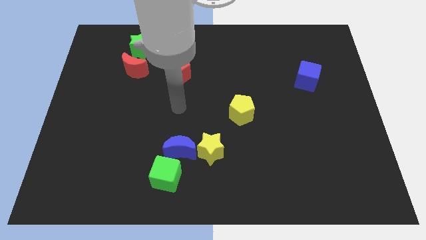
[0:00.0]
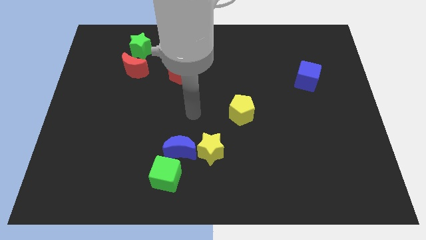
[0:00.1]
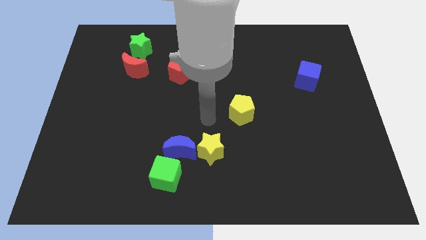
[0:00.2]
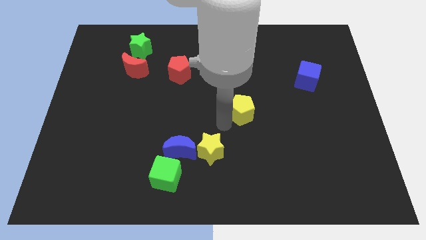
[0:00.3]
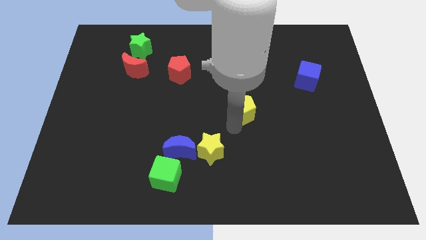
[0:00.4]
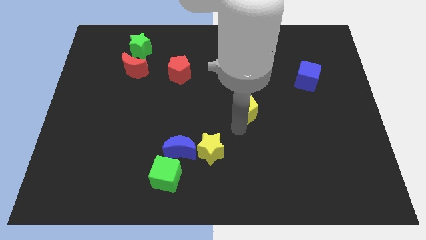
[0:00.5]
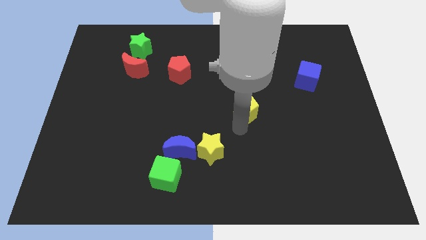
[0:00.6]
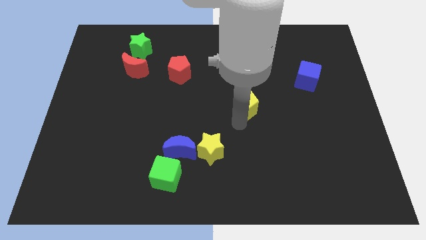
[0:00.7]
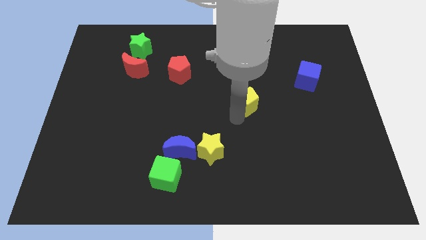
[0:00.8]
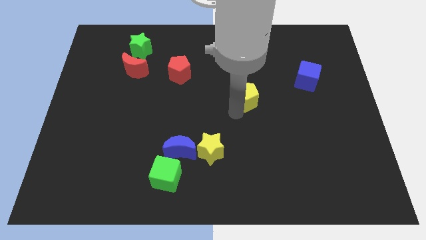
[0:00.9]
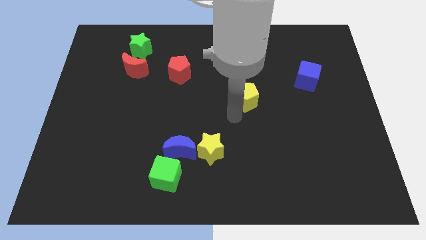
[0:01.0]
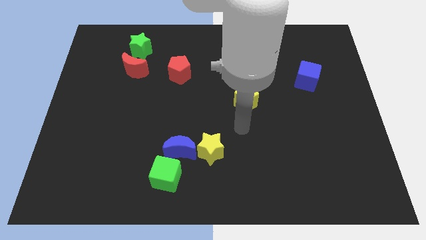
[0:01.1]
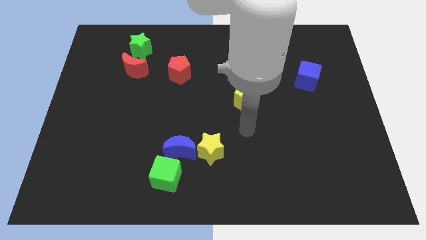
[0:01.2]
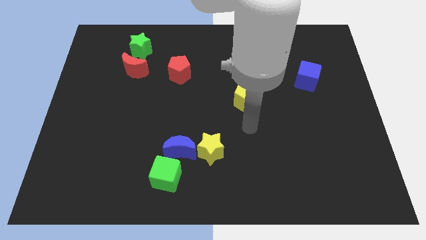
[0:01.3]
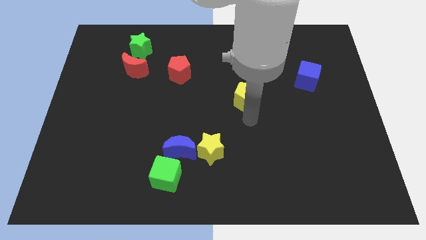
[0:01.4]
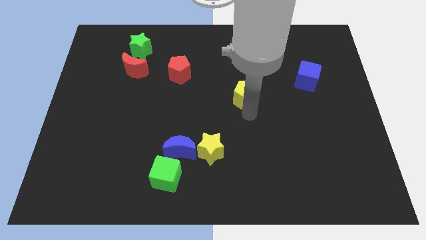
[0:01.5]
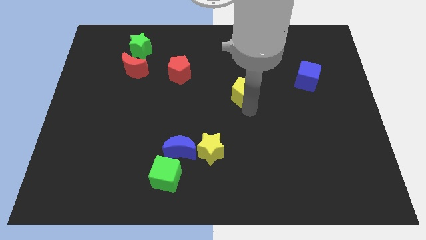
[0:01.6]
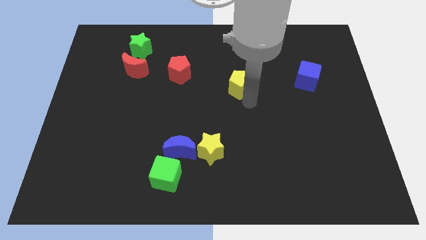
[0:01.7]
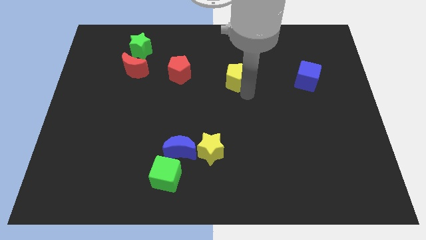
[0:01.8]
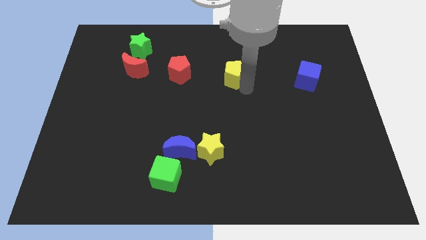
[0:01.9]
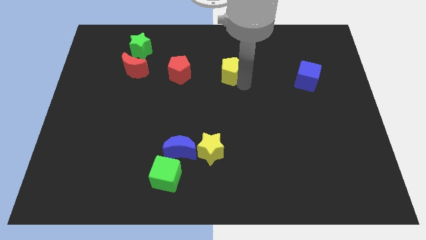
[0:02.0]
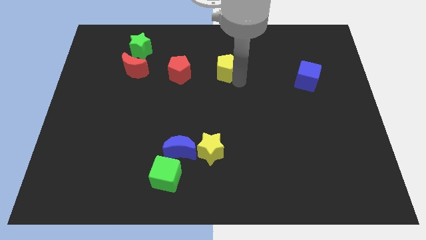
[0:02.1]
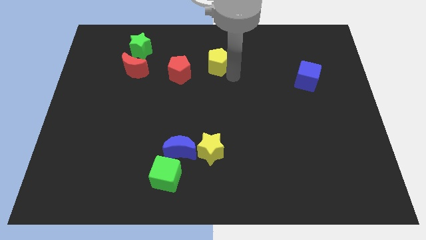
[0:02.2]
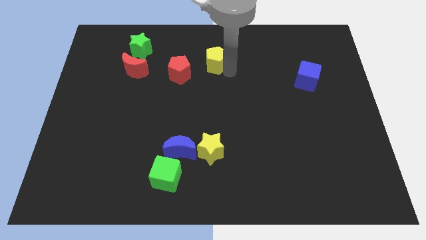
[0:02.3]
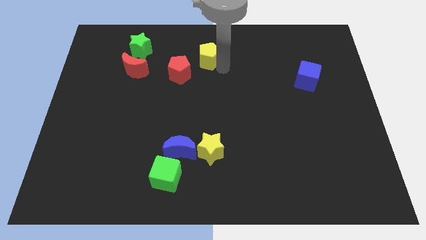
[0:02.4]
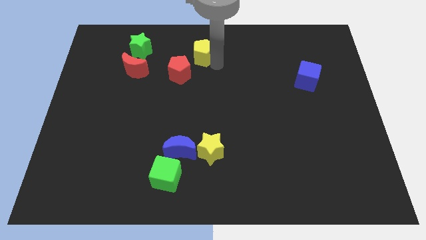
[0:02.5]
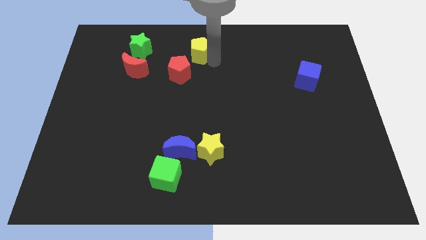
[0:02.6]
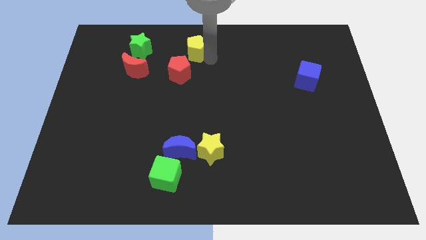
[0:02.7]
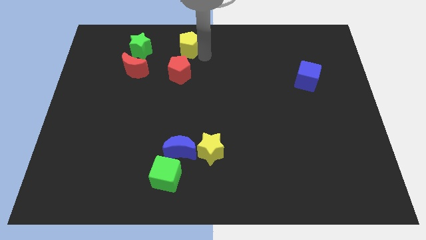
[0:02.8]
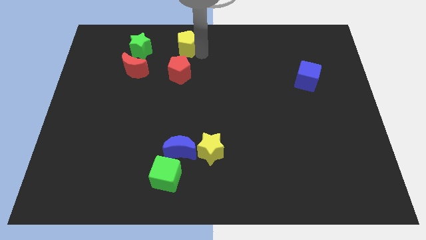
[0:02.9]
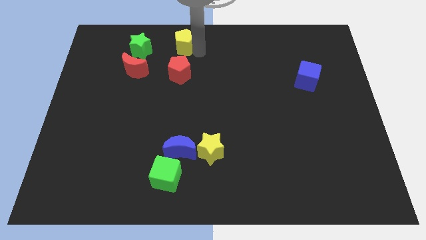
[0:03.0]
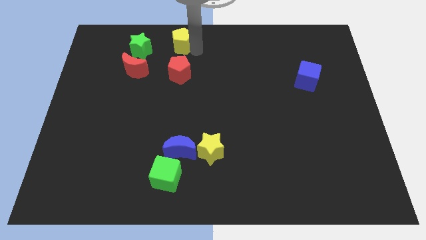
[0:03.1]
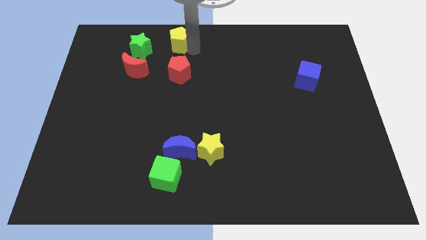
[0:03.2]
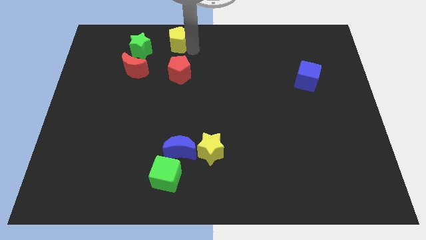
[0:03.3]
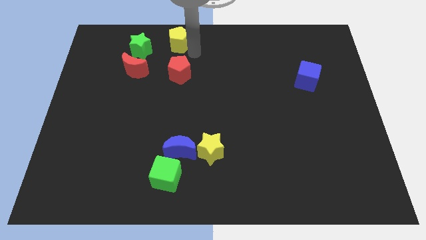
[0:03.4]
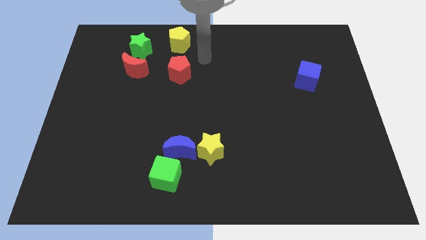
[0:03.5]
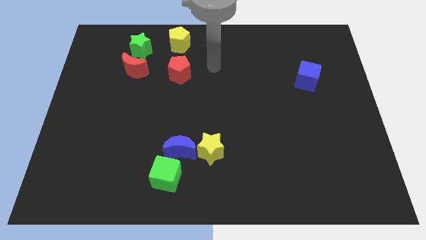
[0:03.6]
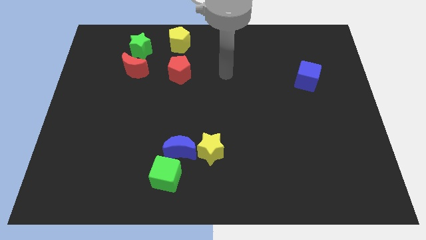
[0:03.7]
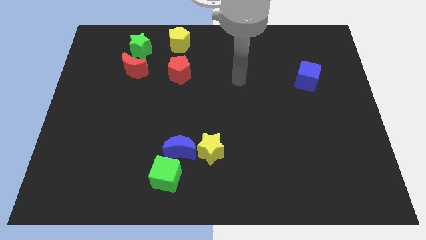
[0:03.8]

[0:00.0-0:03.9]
place the yellow pentagon on top of the red pentagon

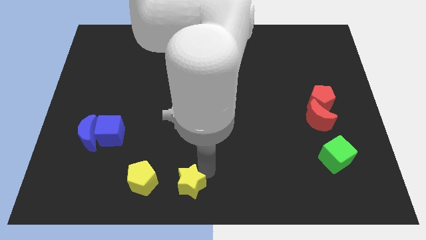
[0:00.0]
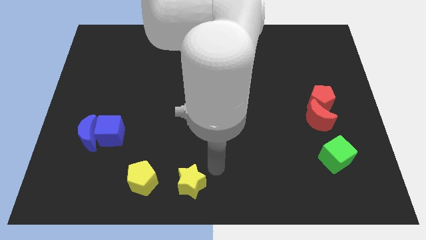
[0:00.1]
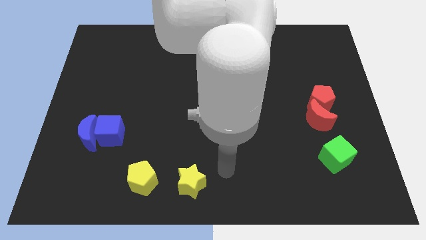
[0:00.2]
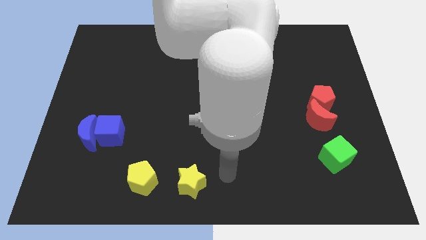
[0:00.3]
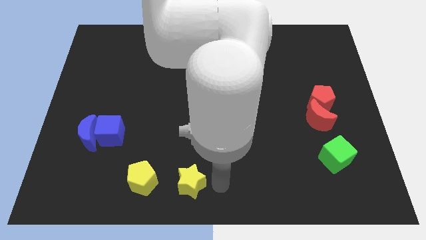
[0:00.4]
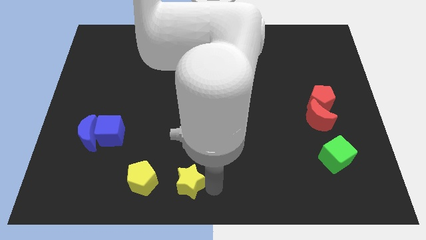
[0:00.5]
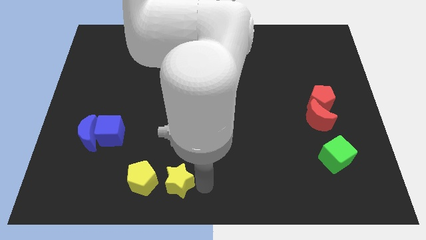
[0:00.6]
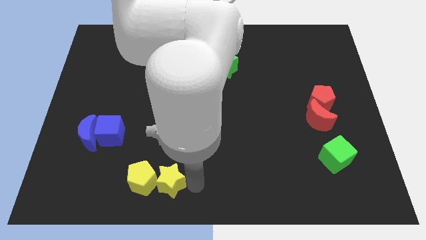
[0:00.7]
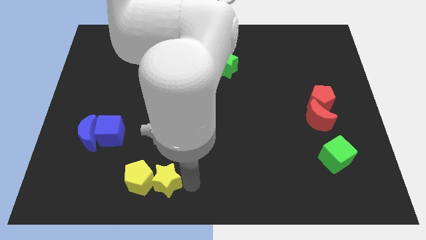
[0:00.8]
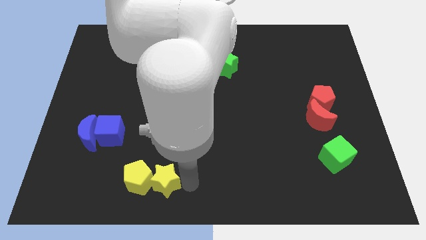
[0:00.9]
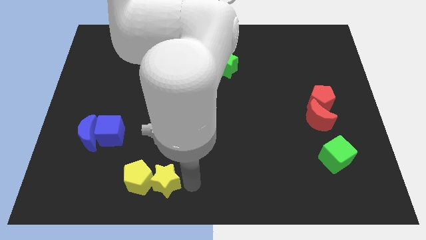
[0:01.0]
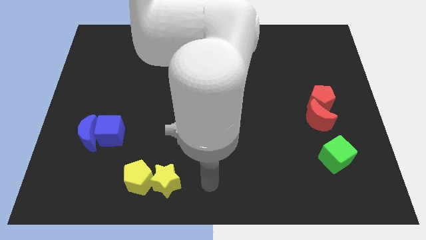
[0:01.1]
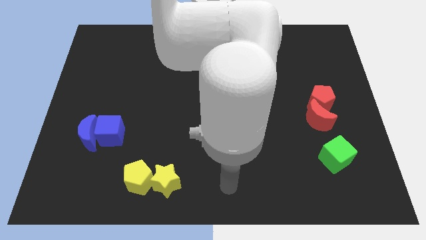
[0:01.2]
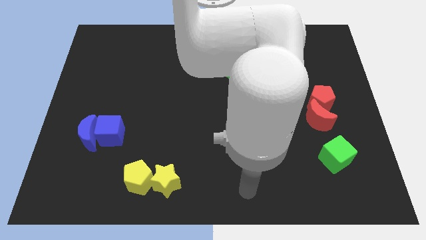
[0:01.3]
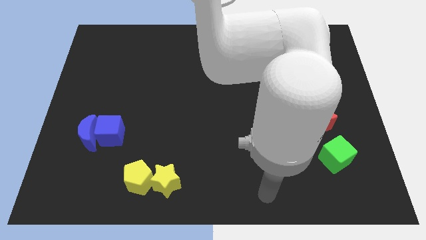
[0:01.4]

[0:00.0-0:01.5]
push the yellow star into the yellow pentagon

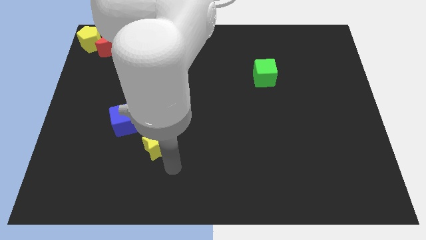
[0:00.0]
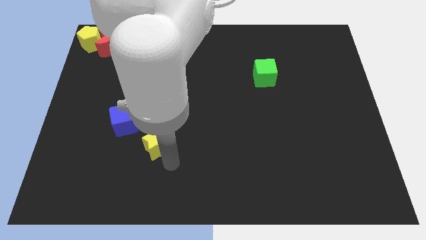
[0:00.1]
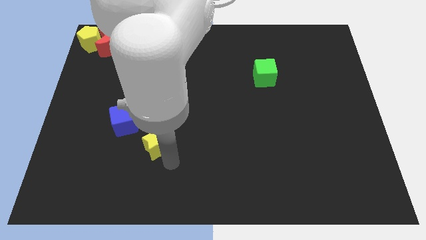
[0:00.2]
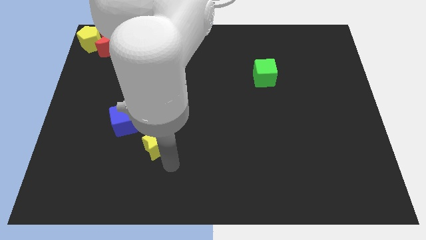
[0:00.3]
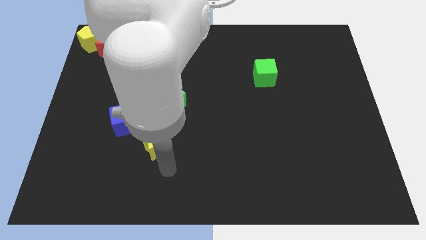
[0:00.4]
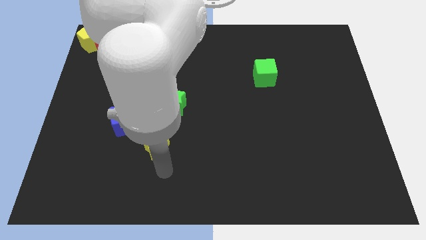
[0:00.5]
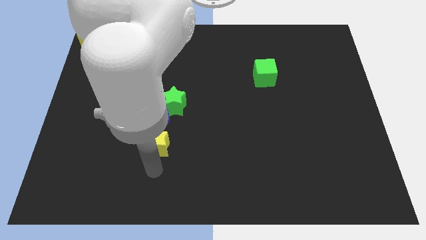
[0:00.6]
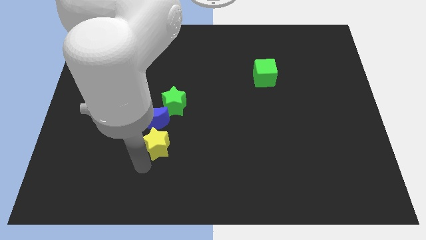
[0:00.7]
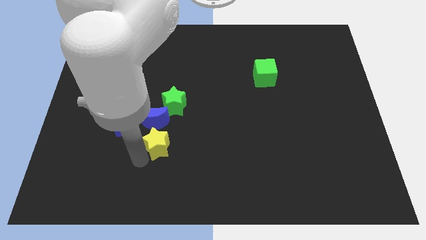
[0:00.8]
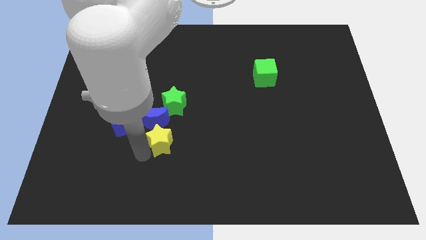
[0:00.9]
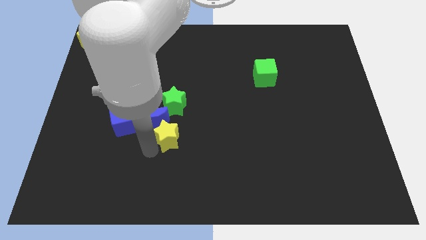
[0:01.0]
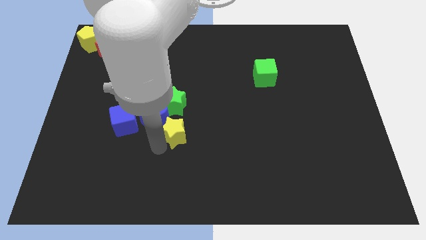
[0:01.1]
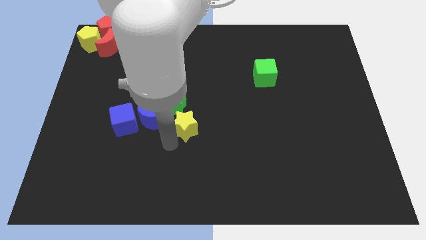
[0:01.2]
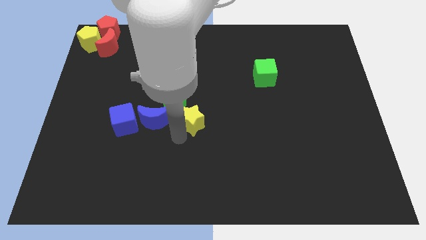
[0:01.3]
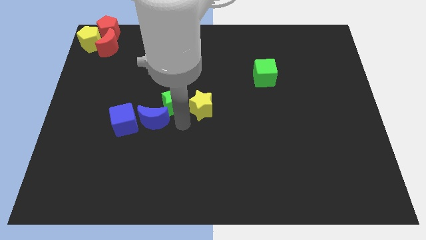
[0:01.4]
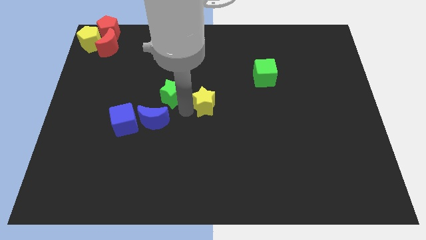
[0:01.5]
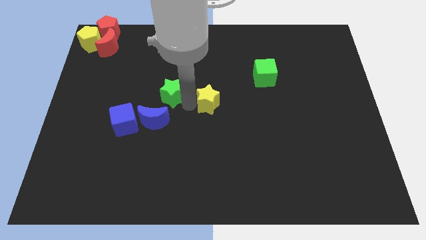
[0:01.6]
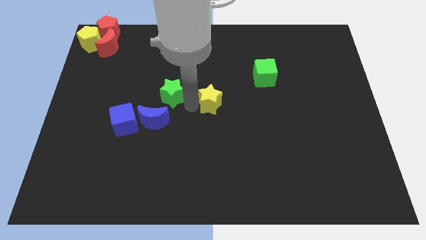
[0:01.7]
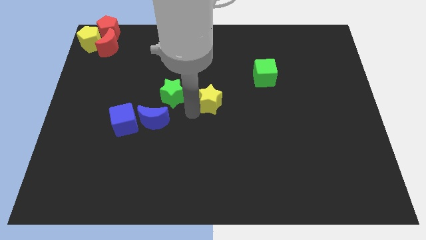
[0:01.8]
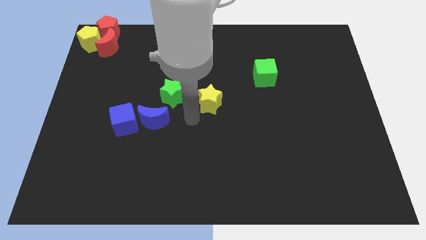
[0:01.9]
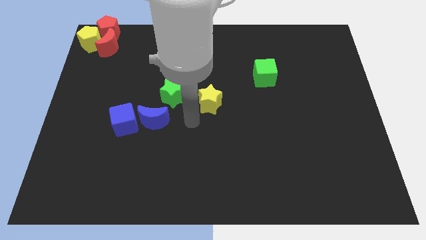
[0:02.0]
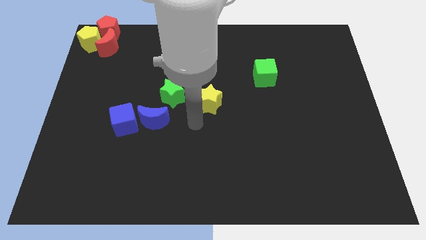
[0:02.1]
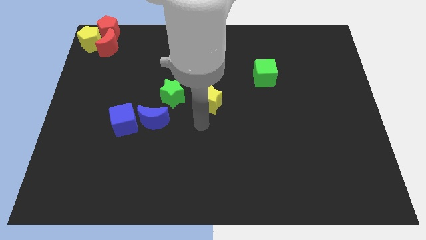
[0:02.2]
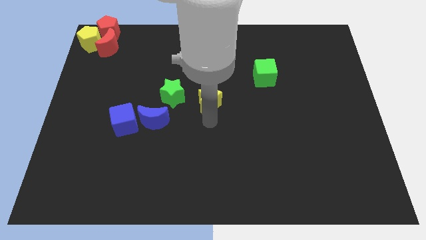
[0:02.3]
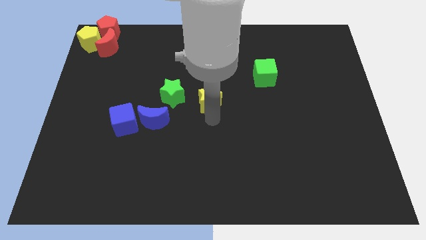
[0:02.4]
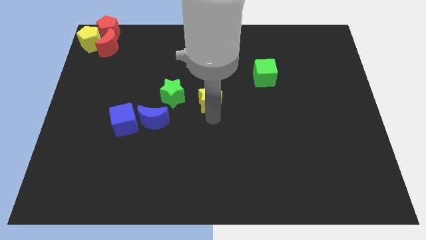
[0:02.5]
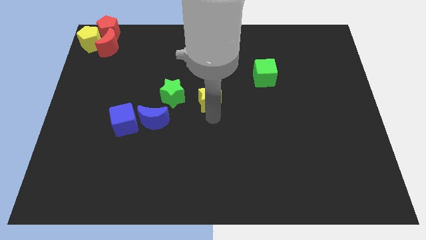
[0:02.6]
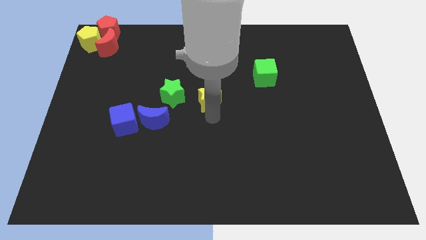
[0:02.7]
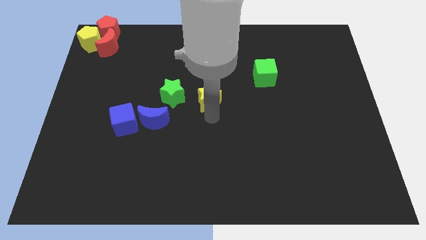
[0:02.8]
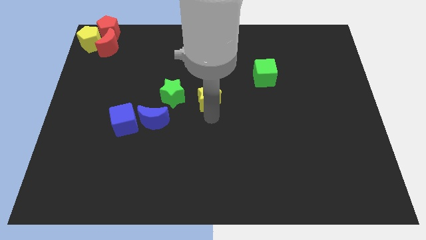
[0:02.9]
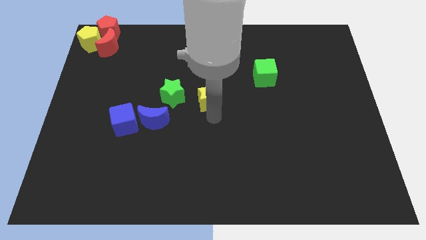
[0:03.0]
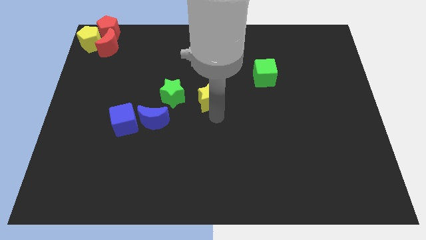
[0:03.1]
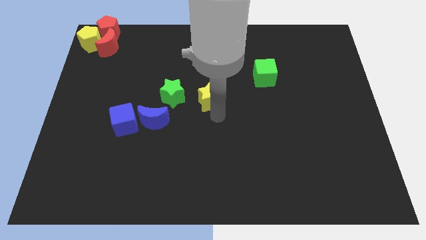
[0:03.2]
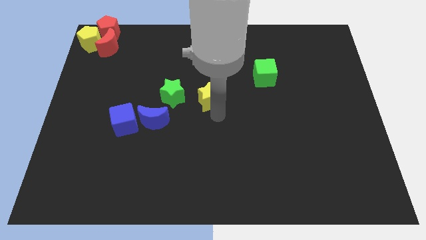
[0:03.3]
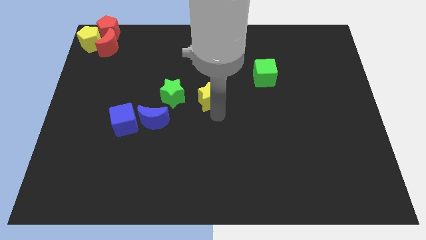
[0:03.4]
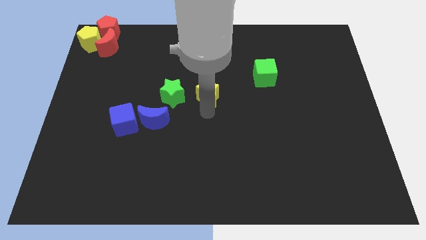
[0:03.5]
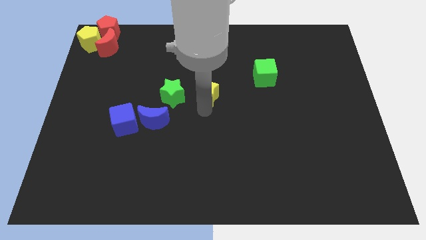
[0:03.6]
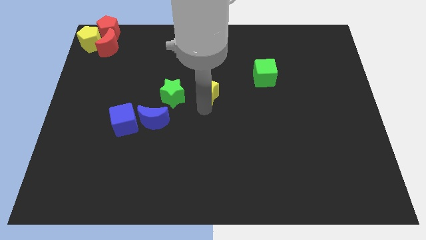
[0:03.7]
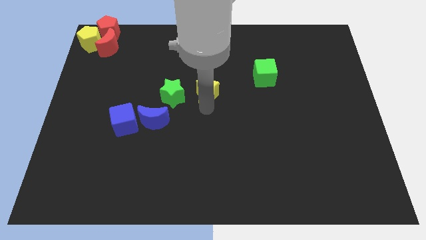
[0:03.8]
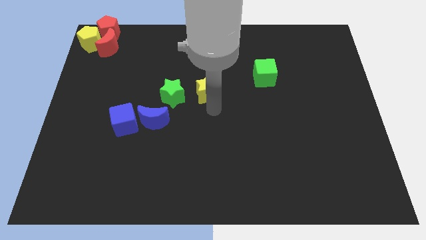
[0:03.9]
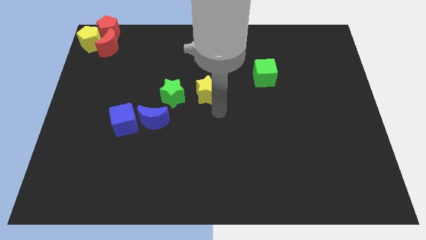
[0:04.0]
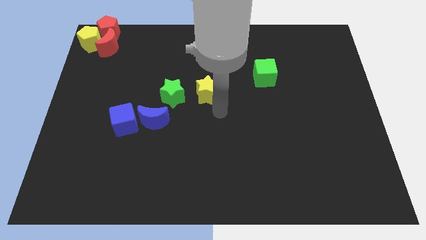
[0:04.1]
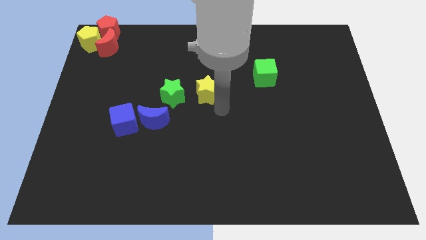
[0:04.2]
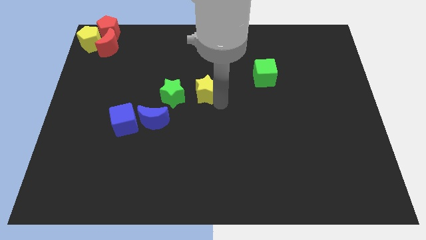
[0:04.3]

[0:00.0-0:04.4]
place yellow star to the right of green star
